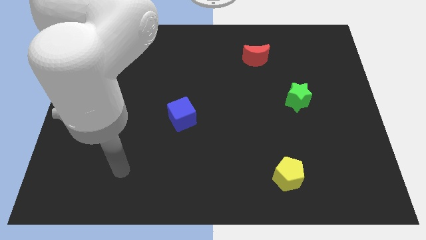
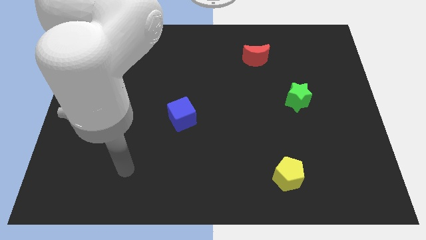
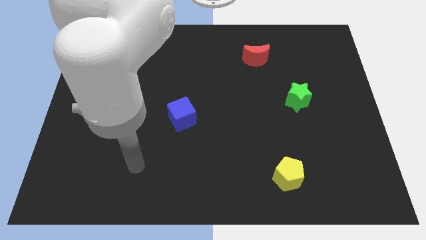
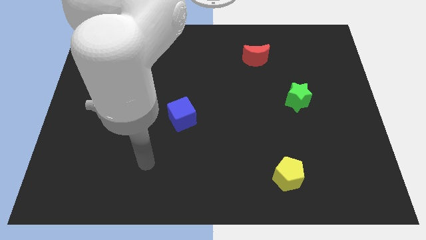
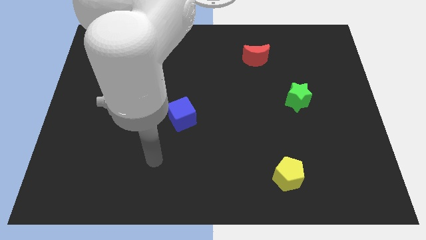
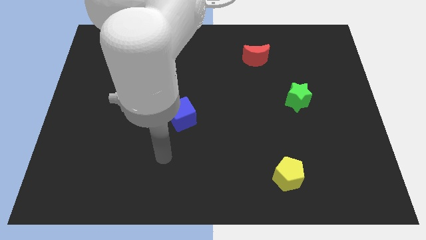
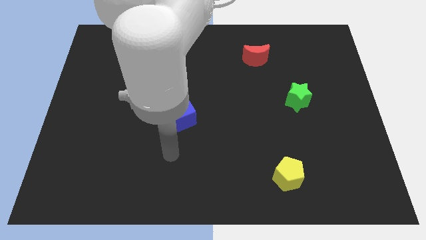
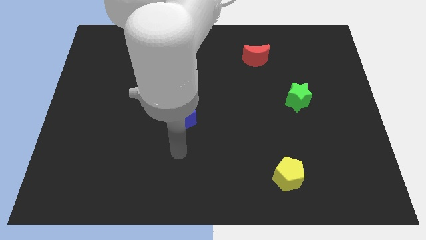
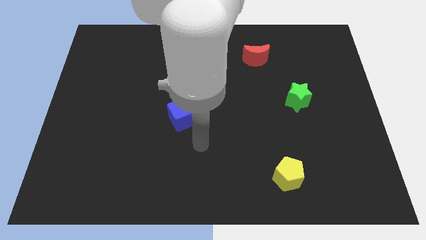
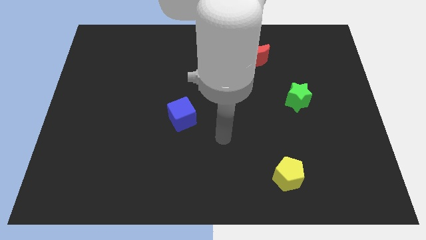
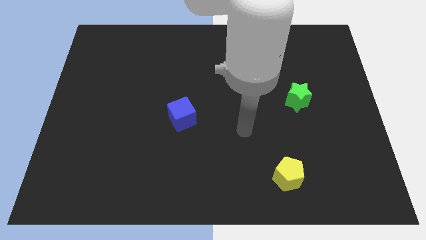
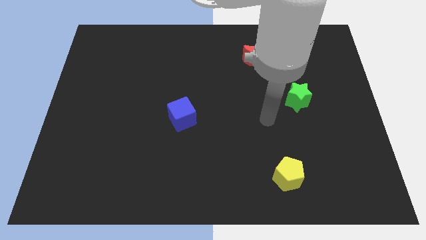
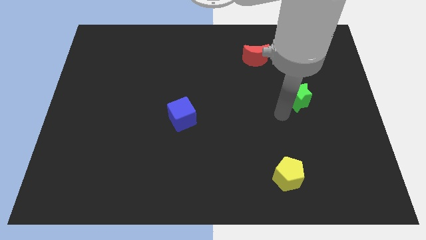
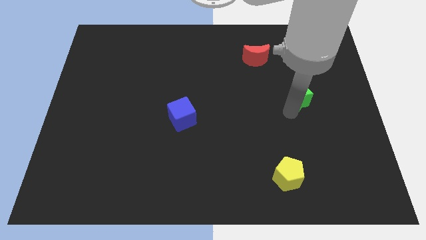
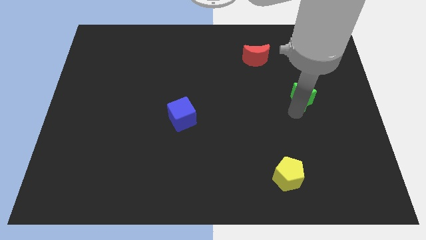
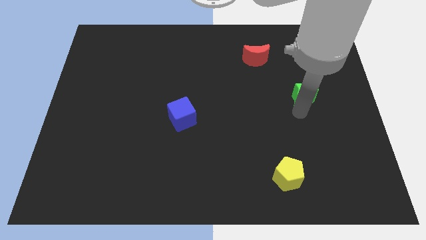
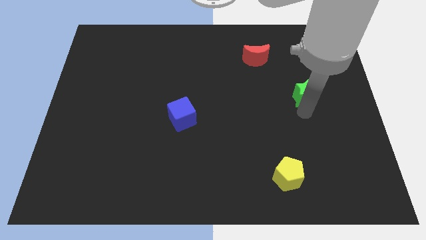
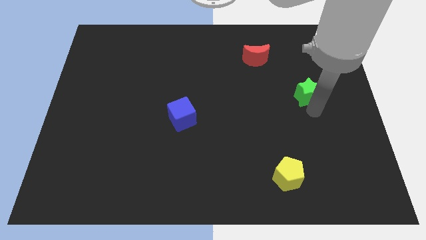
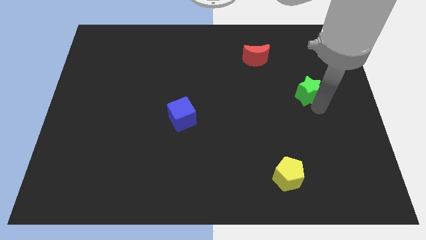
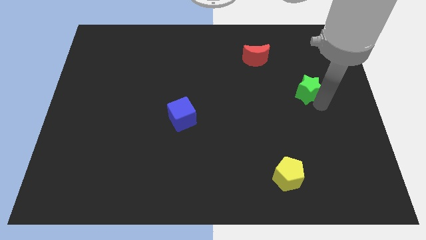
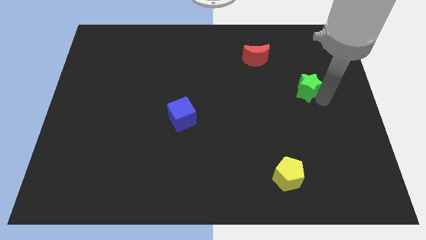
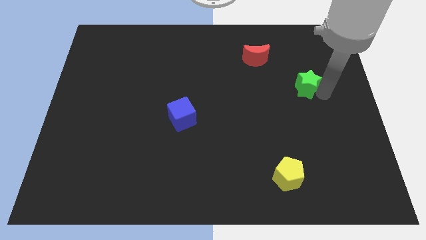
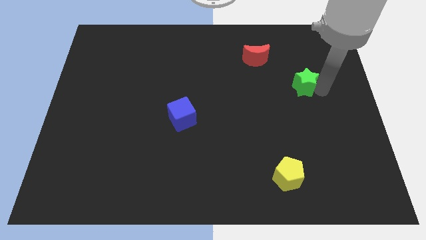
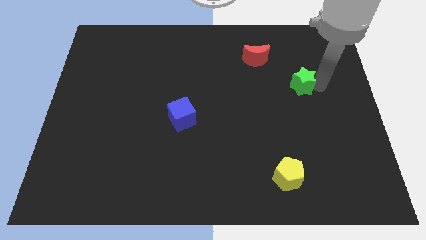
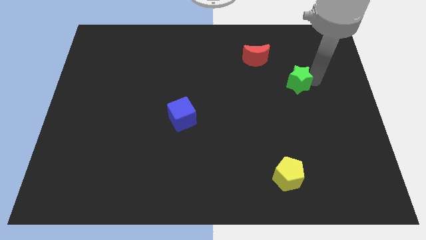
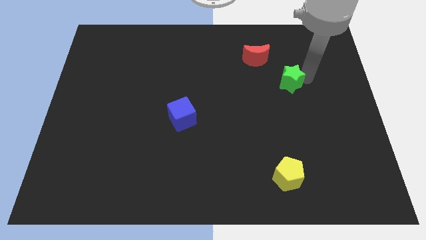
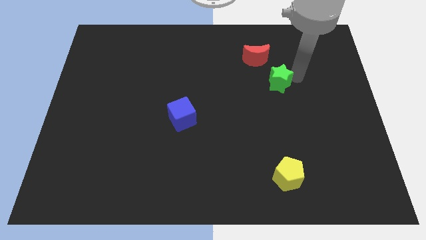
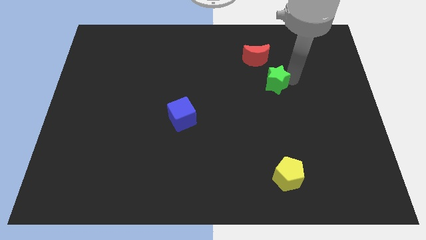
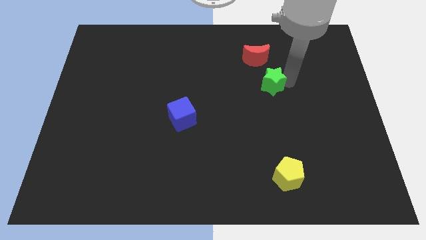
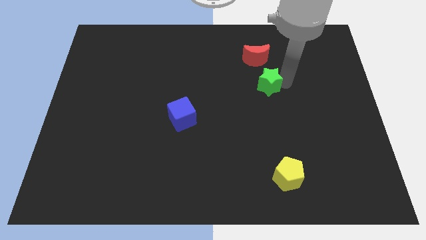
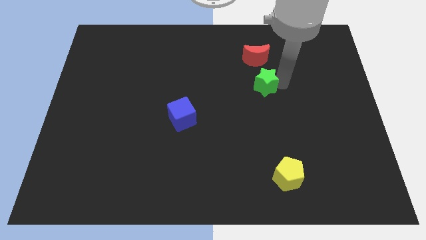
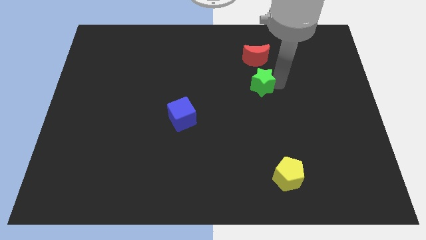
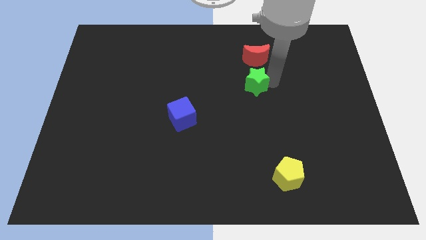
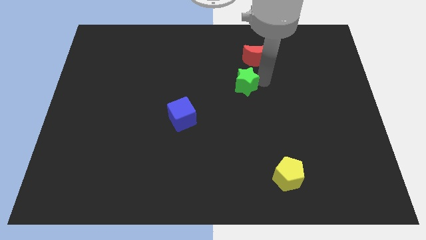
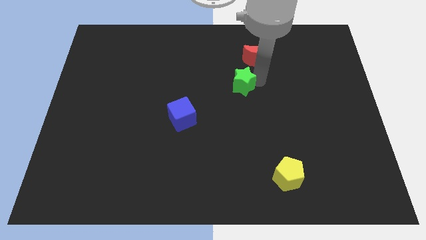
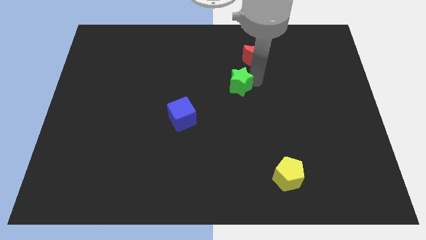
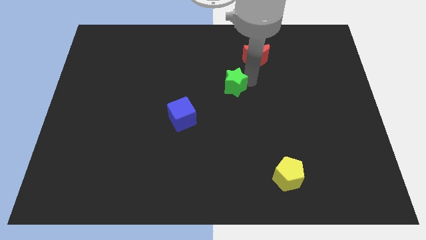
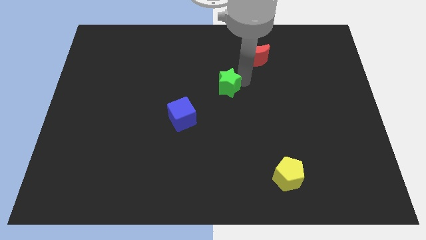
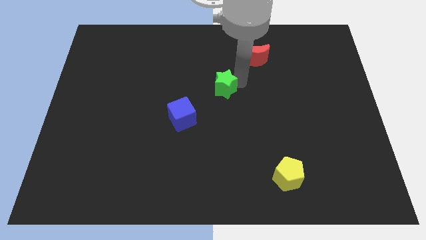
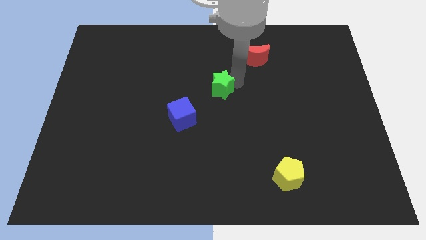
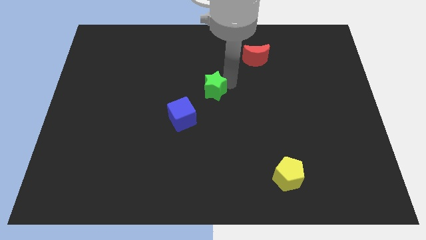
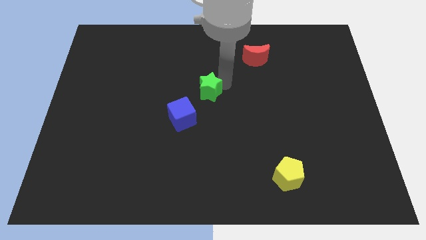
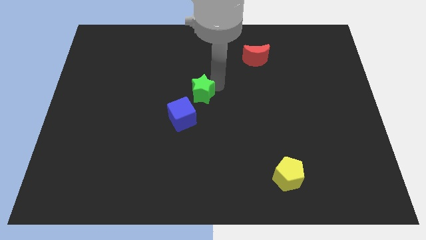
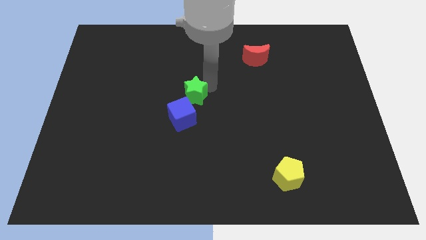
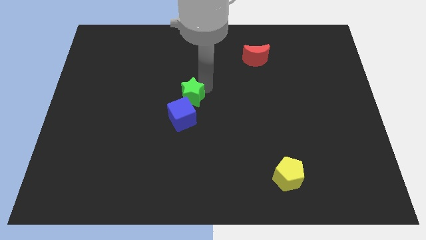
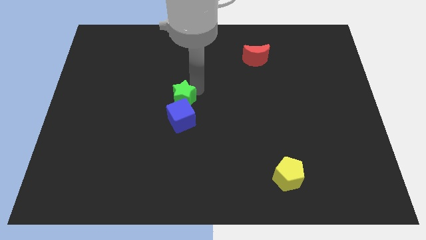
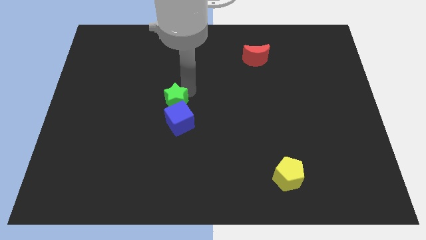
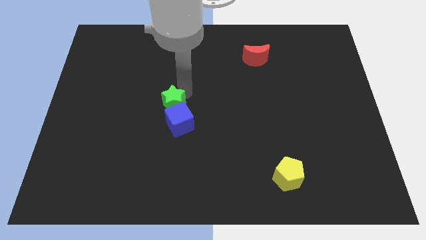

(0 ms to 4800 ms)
put the star towards the cube

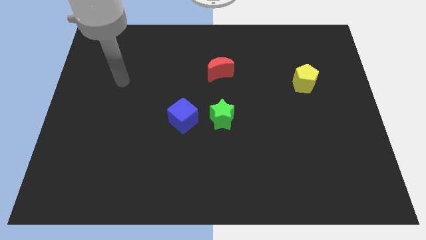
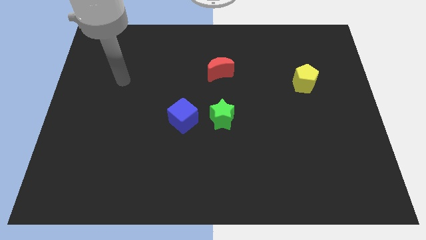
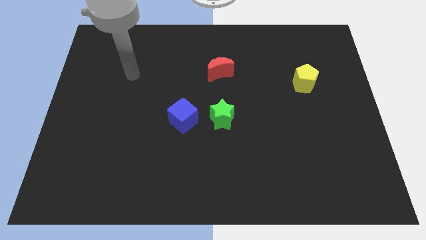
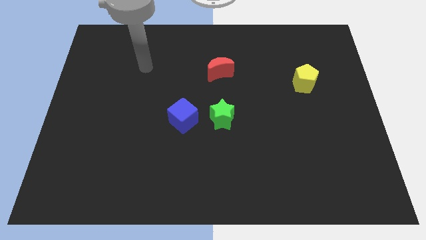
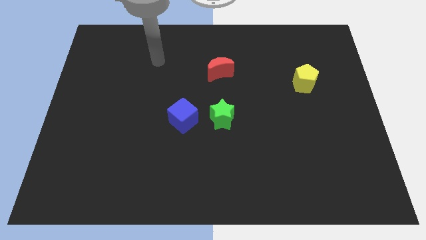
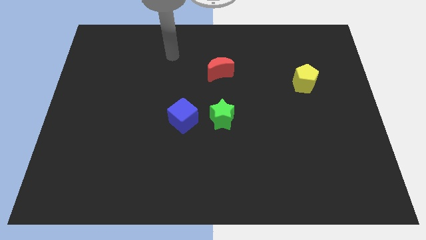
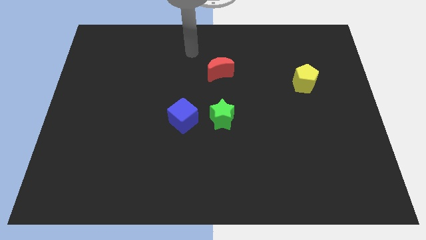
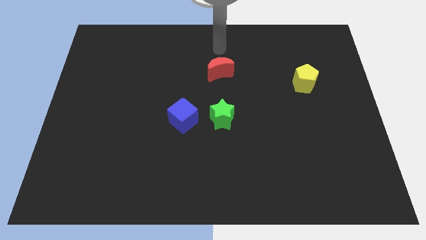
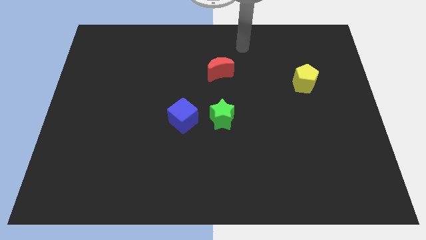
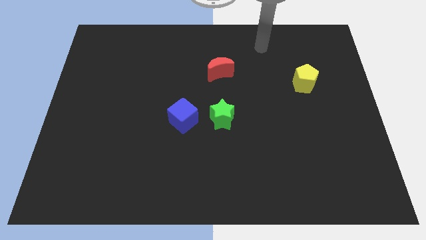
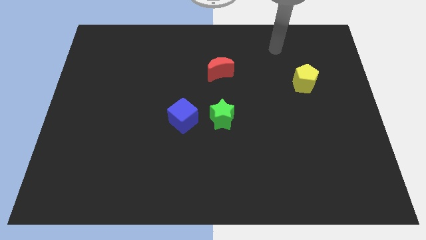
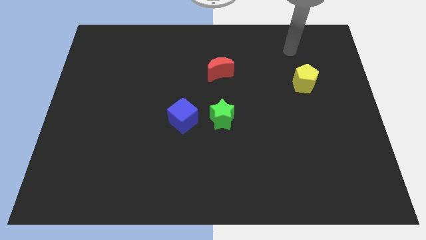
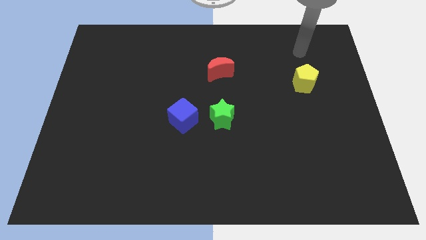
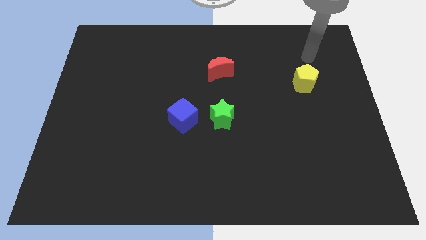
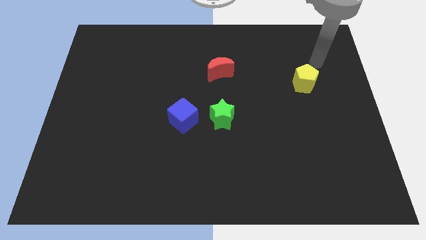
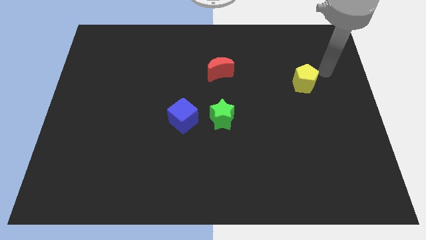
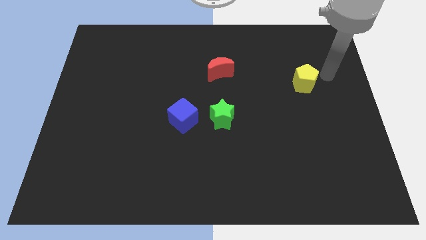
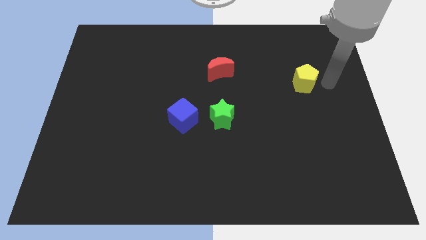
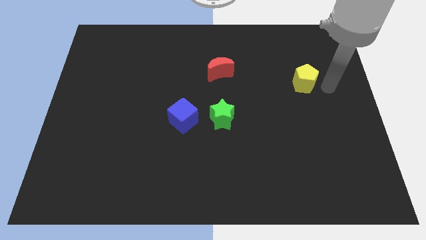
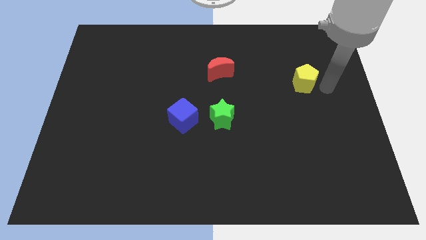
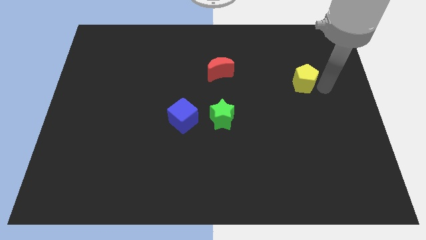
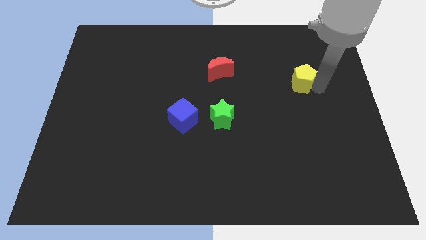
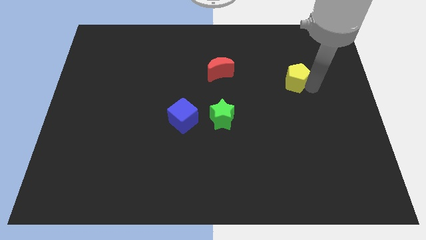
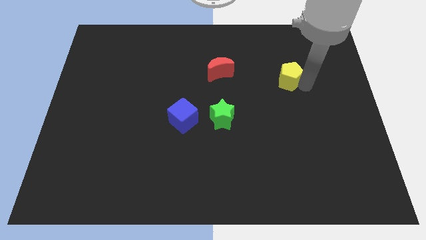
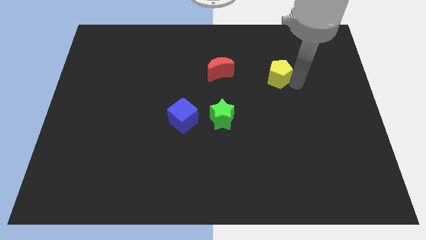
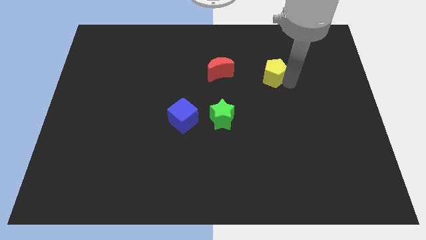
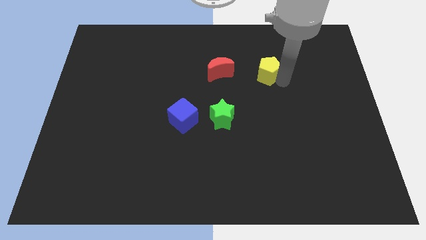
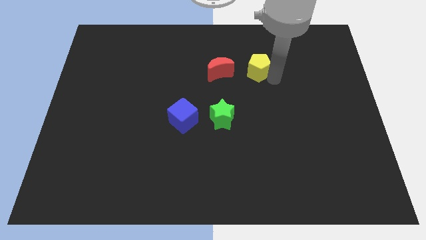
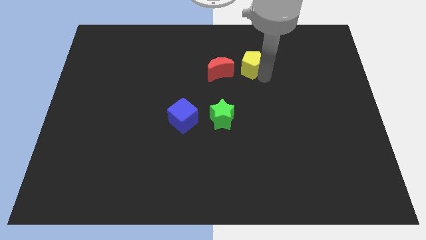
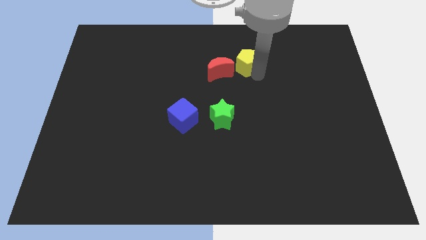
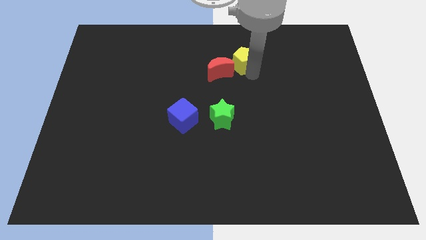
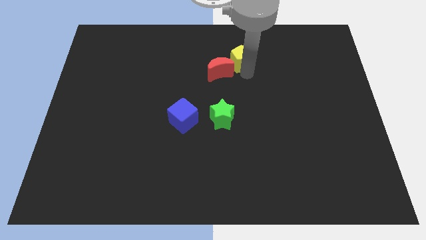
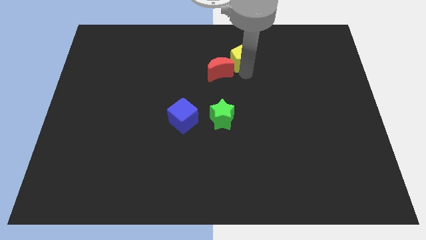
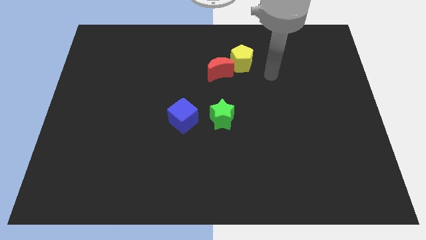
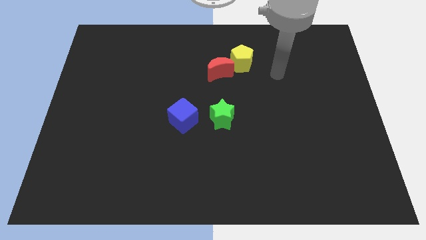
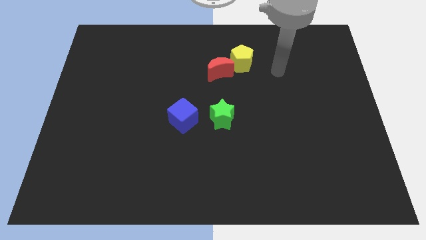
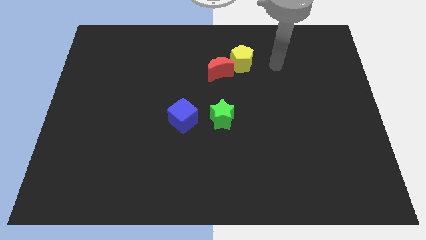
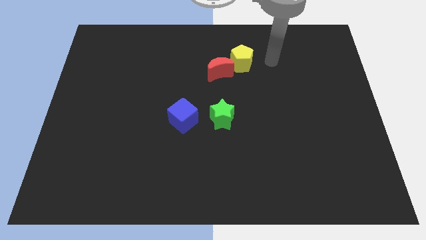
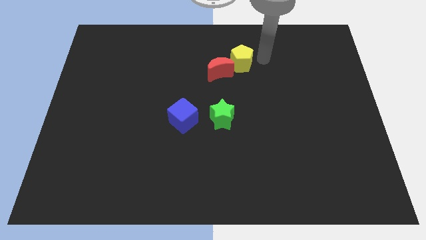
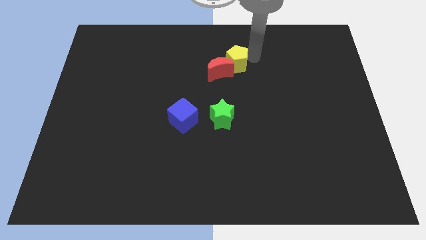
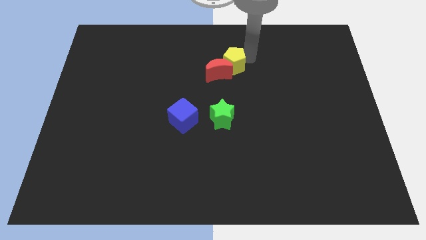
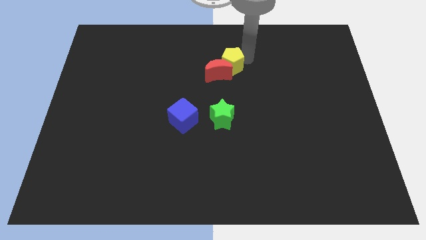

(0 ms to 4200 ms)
slide the yellow block close to the red block

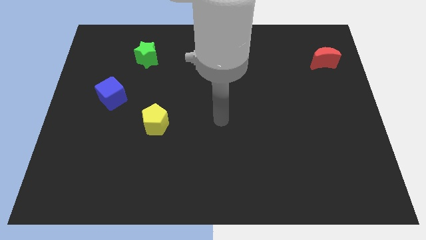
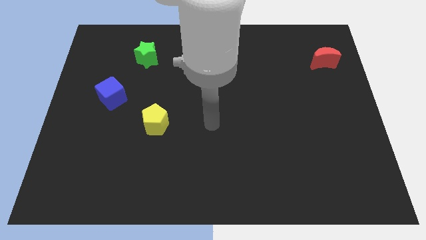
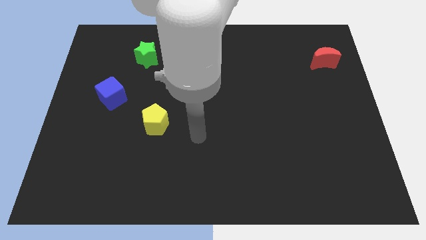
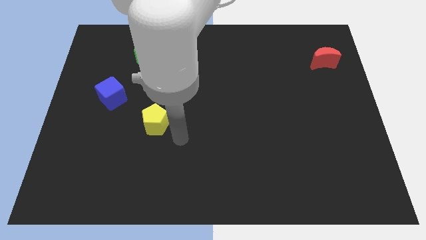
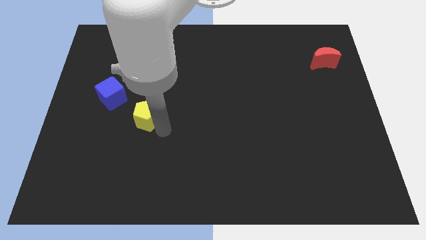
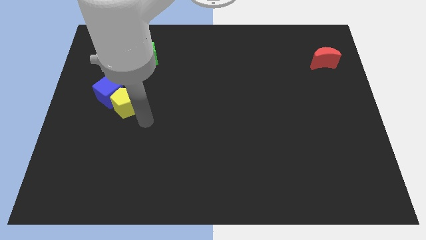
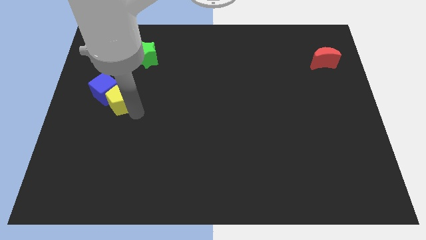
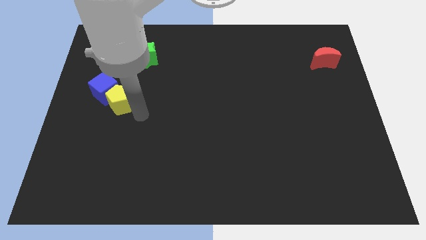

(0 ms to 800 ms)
put the yellow pentagon towards the blue cube
